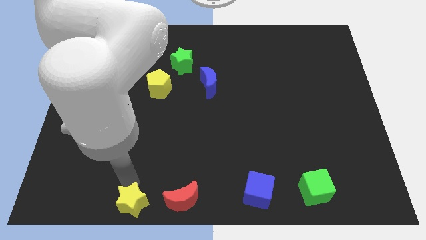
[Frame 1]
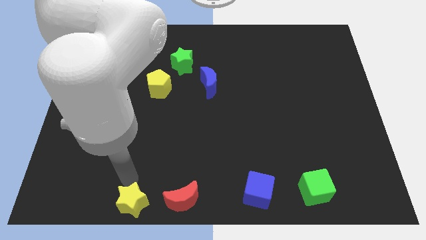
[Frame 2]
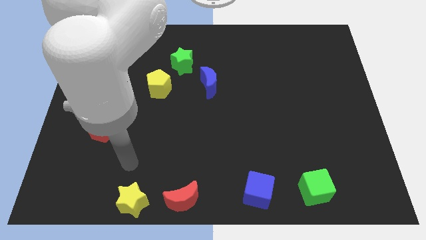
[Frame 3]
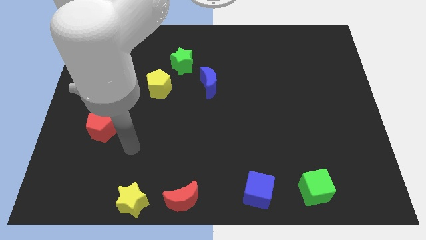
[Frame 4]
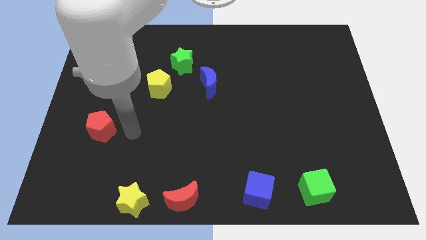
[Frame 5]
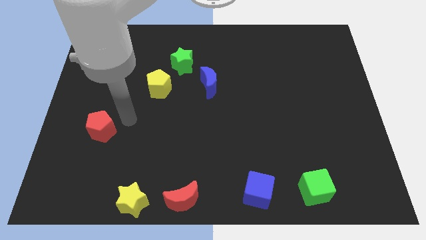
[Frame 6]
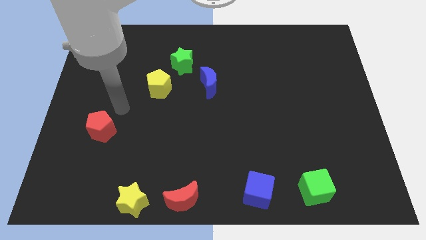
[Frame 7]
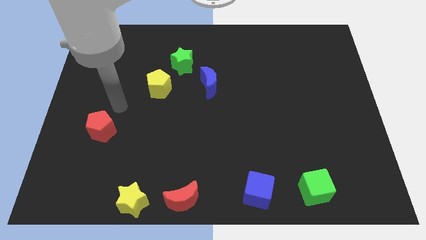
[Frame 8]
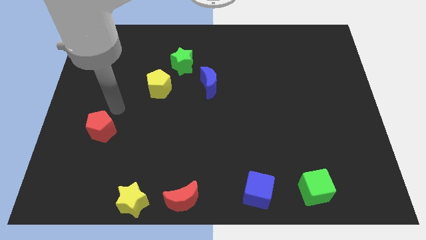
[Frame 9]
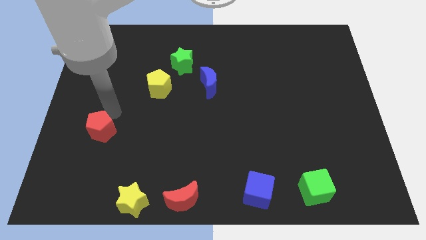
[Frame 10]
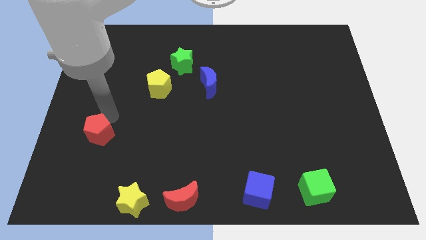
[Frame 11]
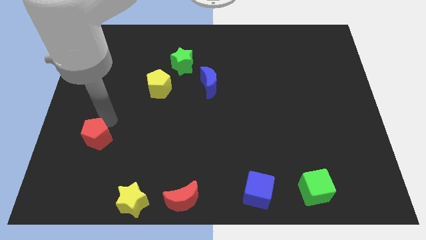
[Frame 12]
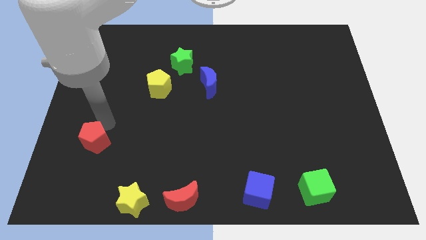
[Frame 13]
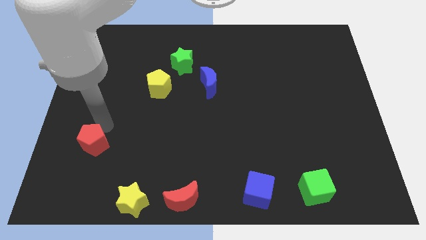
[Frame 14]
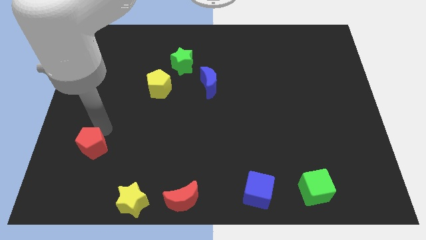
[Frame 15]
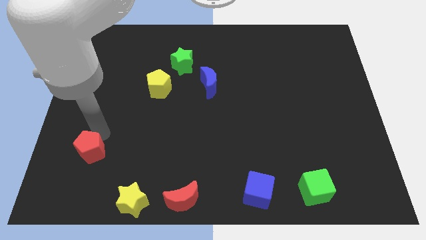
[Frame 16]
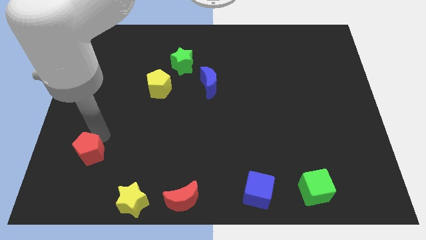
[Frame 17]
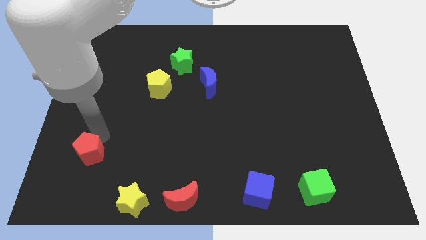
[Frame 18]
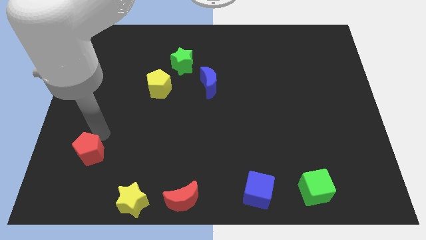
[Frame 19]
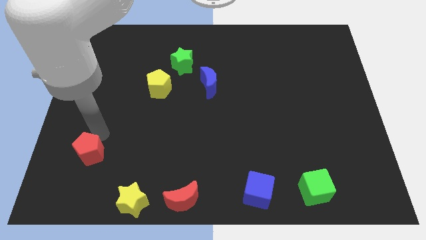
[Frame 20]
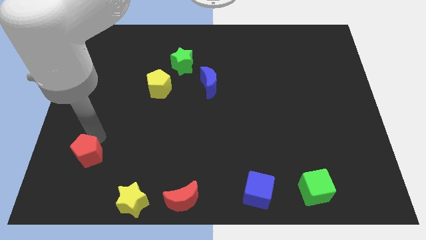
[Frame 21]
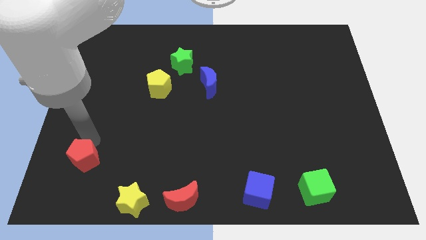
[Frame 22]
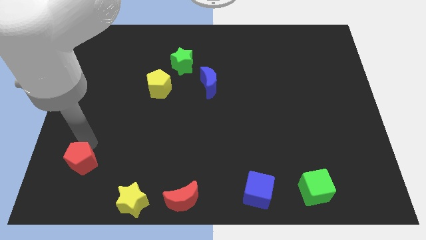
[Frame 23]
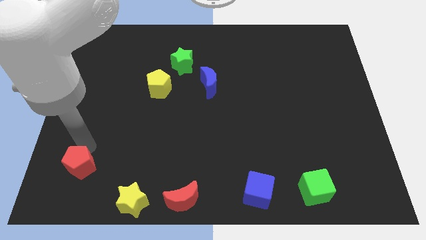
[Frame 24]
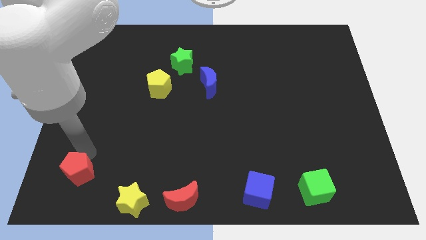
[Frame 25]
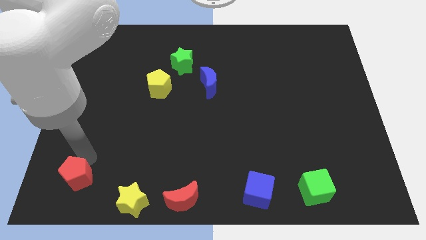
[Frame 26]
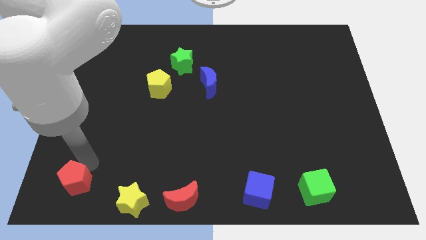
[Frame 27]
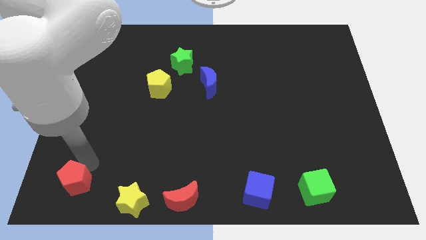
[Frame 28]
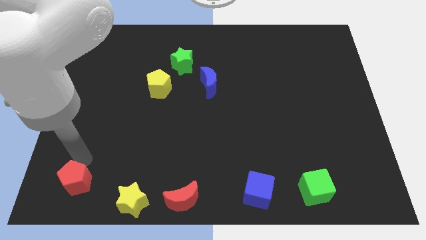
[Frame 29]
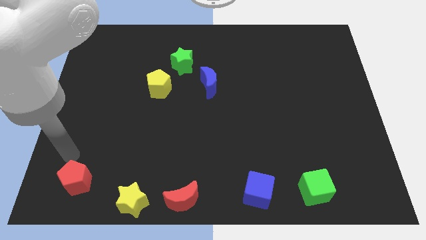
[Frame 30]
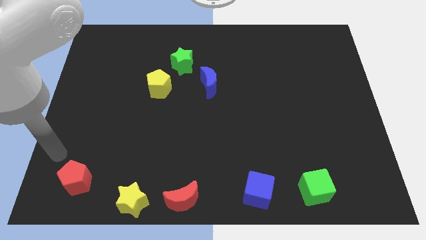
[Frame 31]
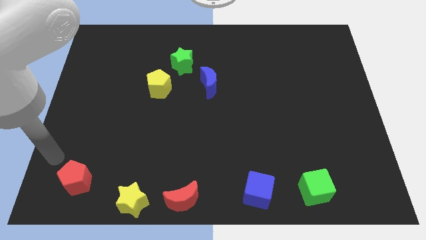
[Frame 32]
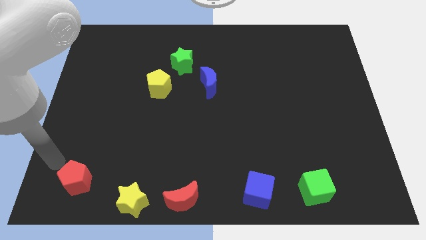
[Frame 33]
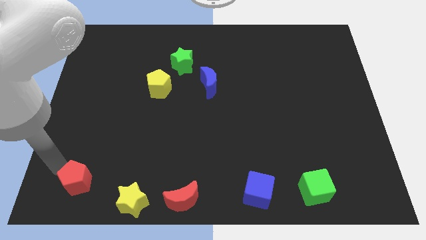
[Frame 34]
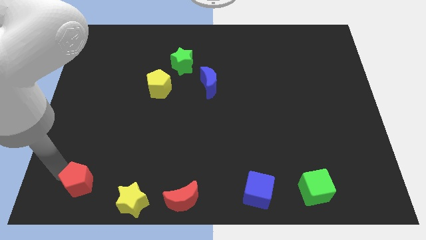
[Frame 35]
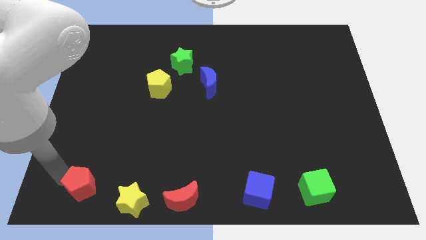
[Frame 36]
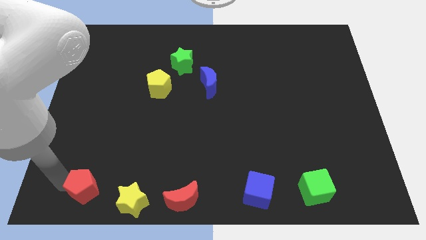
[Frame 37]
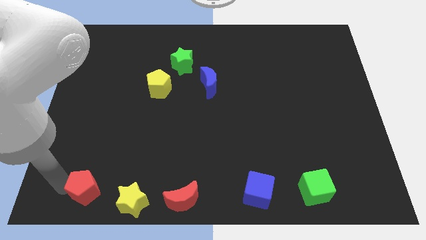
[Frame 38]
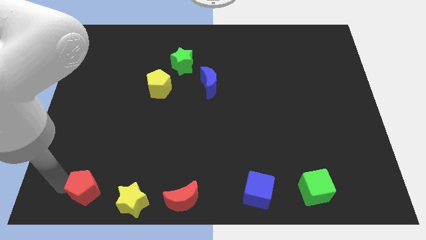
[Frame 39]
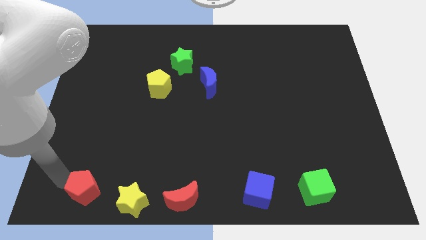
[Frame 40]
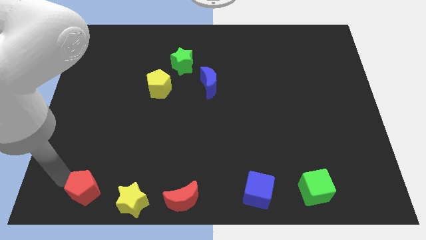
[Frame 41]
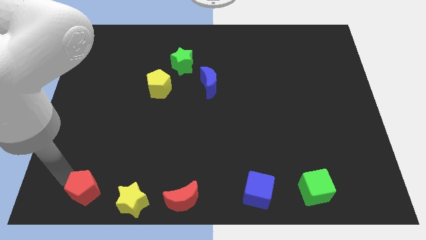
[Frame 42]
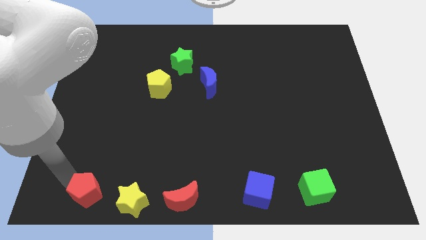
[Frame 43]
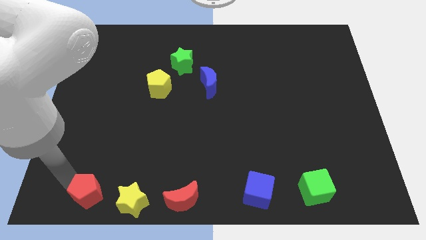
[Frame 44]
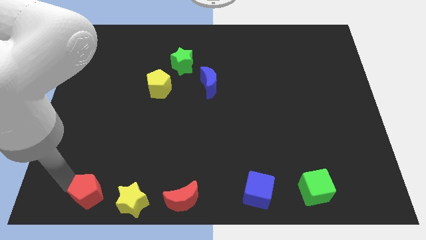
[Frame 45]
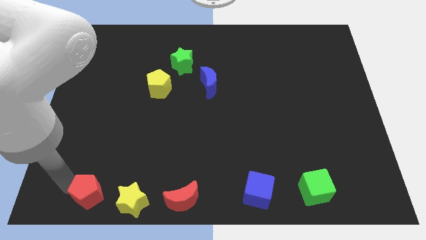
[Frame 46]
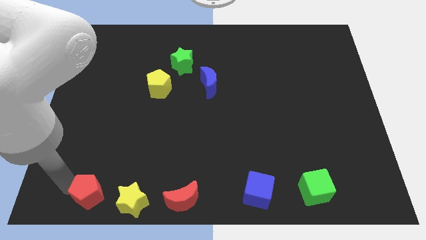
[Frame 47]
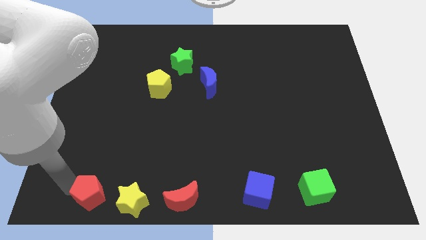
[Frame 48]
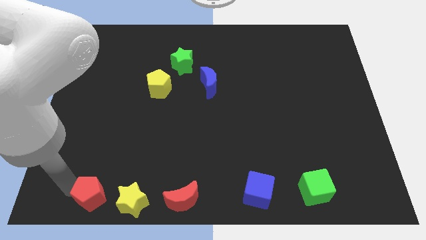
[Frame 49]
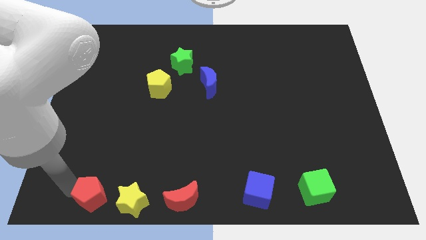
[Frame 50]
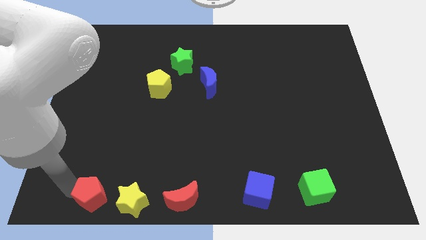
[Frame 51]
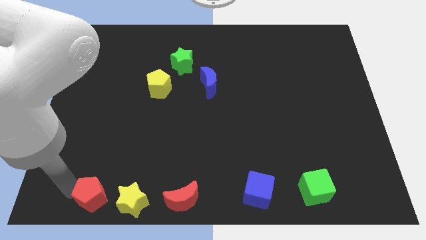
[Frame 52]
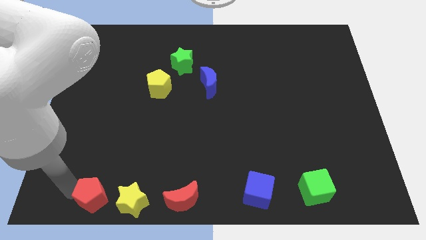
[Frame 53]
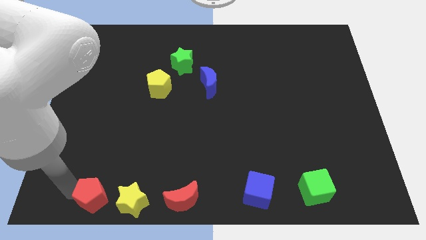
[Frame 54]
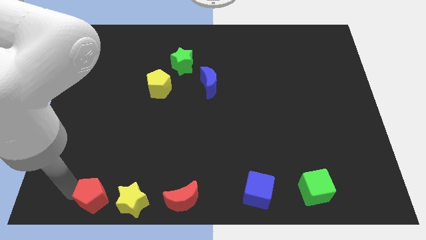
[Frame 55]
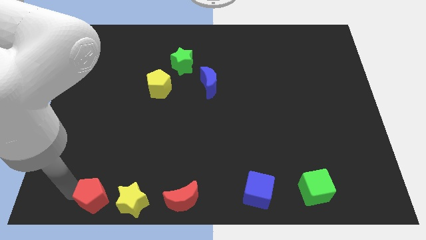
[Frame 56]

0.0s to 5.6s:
move the red pentagon to the left of the yellow star

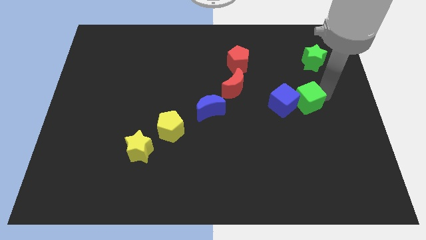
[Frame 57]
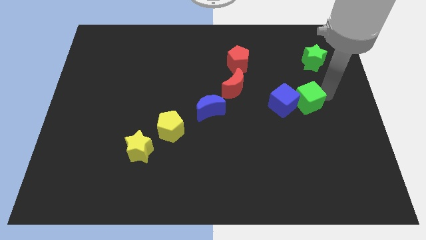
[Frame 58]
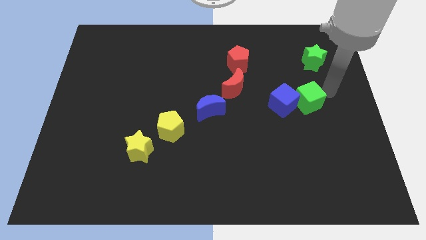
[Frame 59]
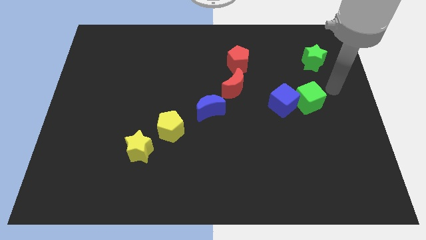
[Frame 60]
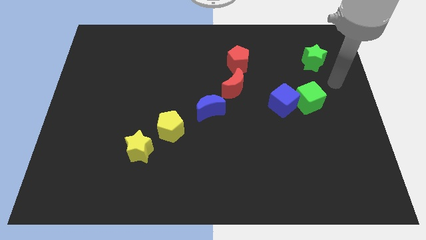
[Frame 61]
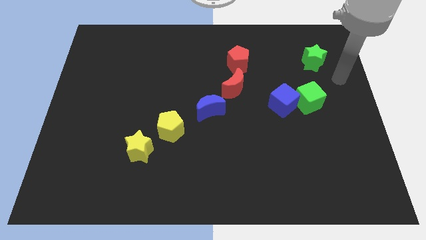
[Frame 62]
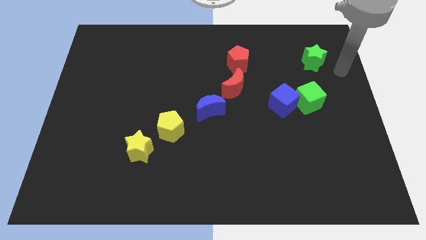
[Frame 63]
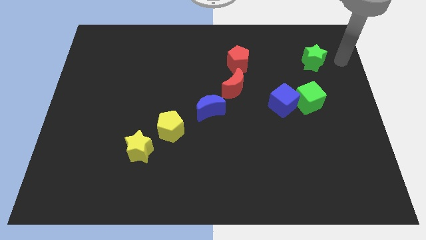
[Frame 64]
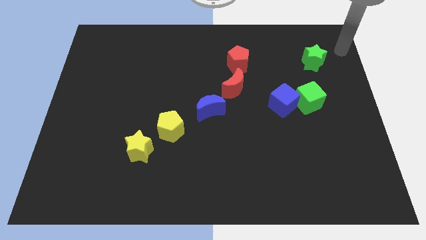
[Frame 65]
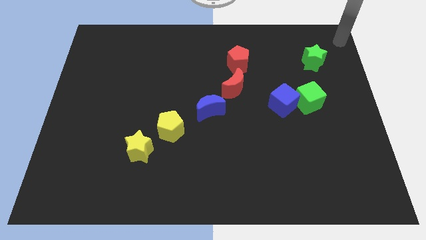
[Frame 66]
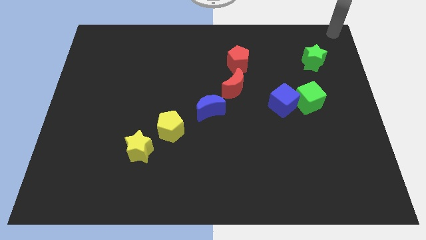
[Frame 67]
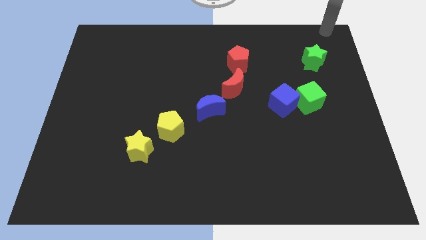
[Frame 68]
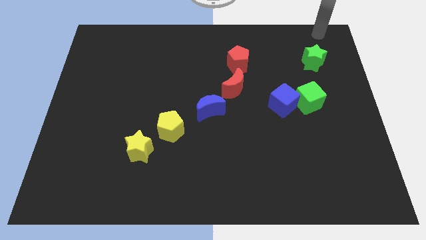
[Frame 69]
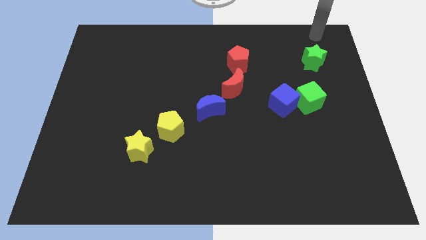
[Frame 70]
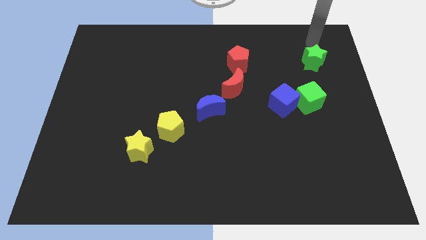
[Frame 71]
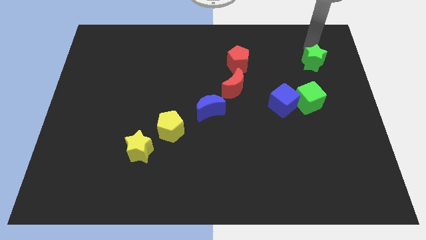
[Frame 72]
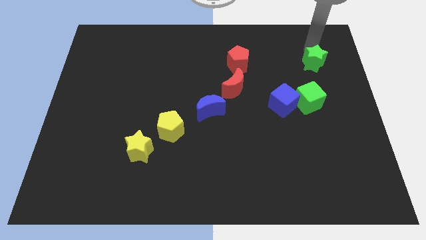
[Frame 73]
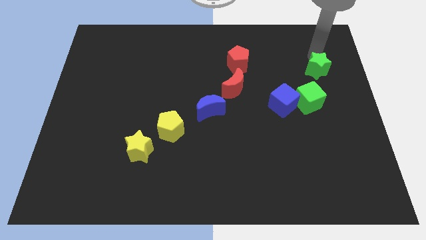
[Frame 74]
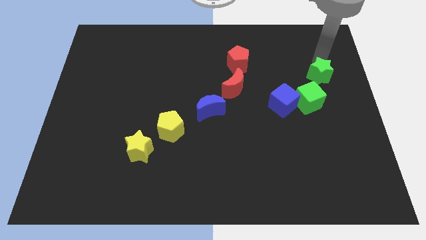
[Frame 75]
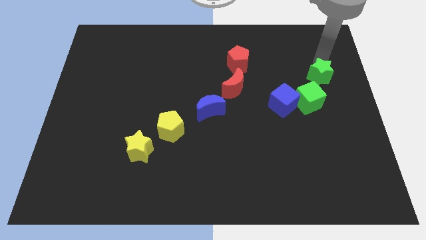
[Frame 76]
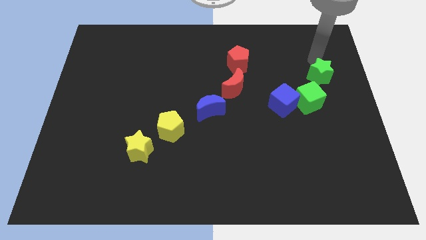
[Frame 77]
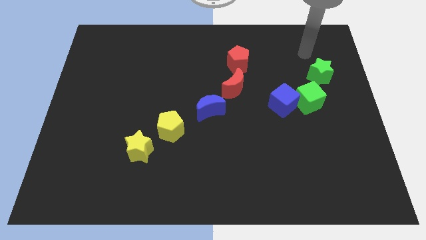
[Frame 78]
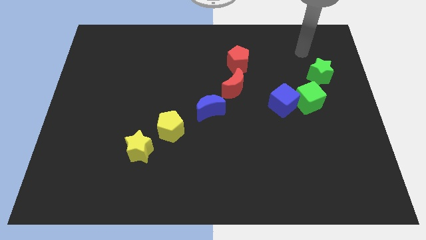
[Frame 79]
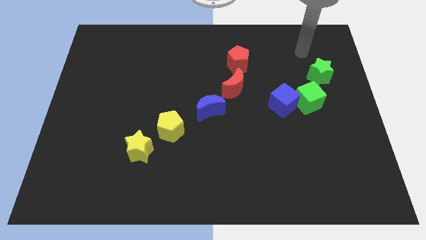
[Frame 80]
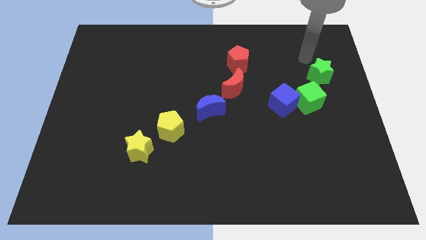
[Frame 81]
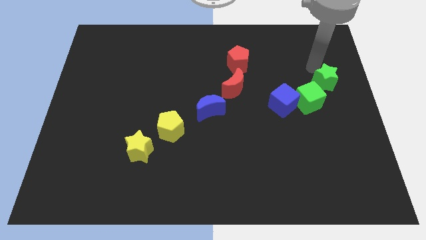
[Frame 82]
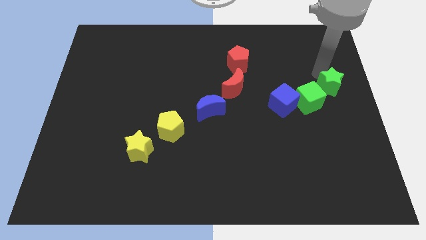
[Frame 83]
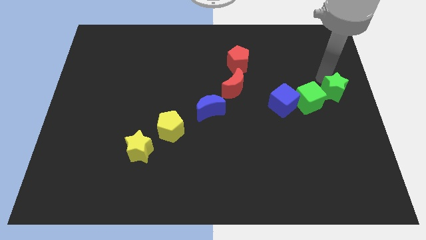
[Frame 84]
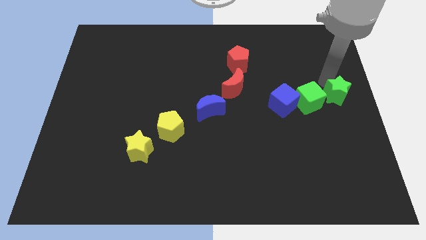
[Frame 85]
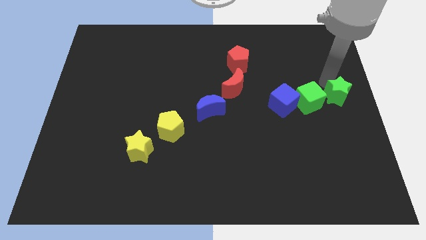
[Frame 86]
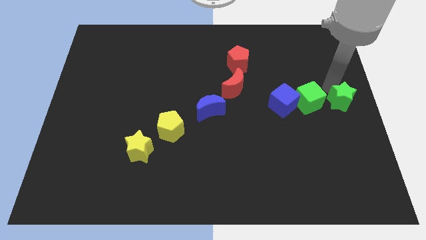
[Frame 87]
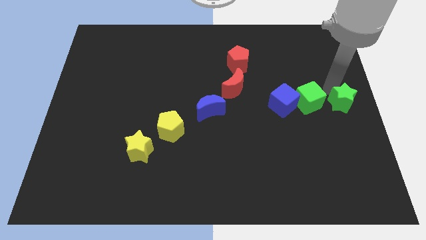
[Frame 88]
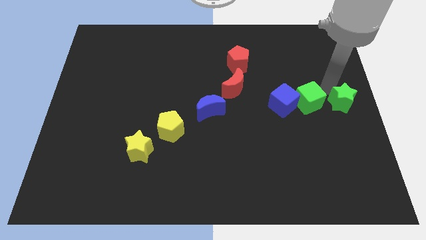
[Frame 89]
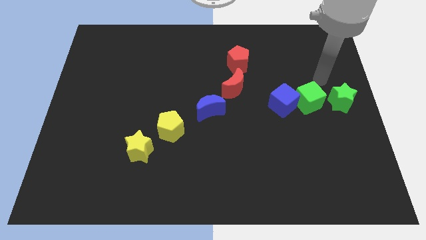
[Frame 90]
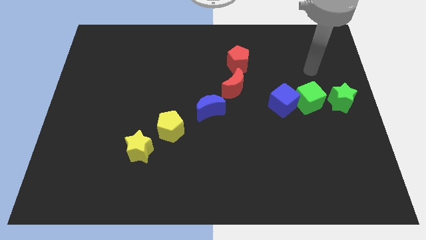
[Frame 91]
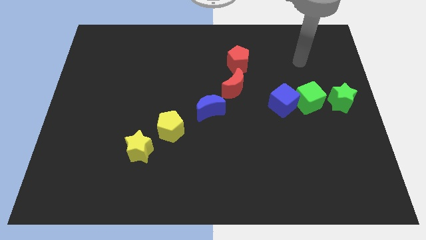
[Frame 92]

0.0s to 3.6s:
move green star to the right of green cube
